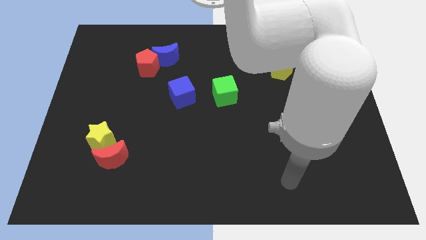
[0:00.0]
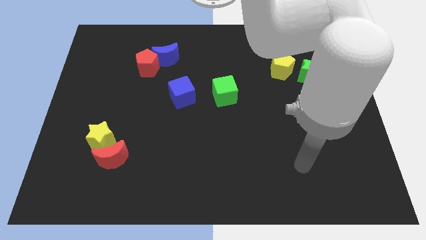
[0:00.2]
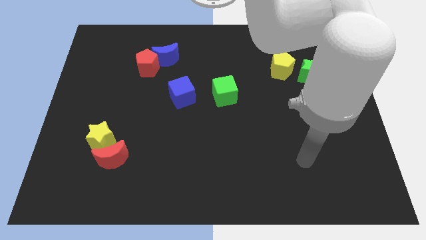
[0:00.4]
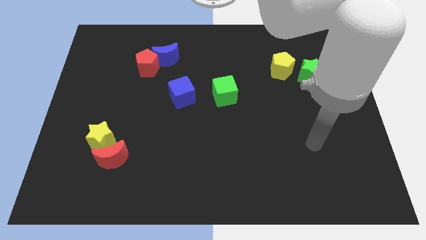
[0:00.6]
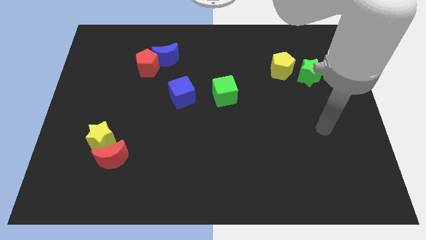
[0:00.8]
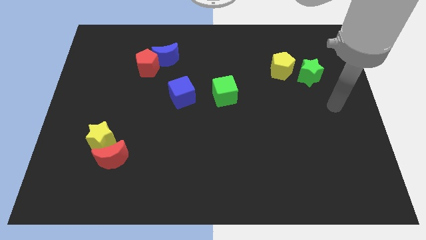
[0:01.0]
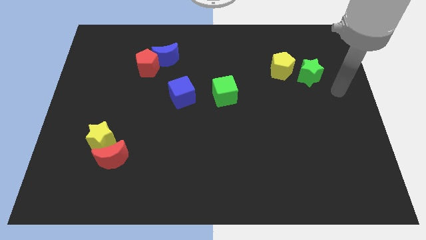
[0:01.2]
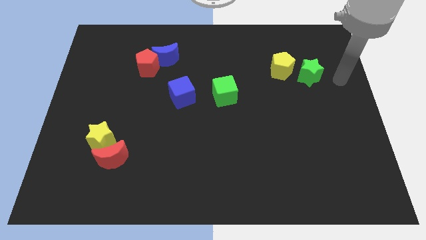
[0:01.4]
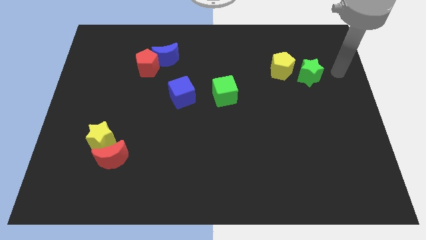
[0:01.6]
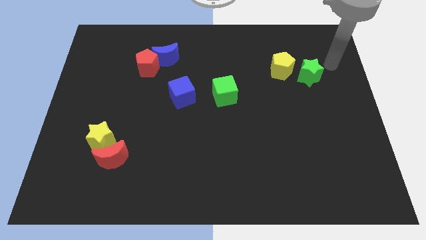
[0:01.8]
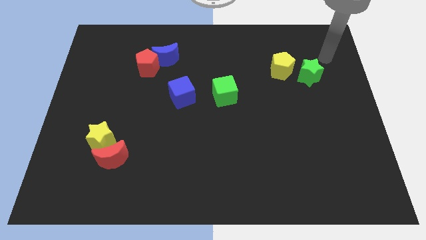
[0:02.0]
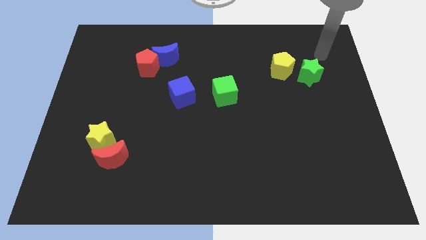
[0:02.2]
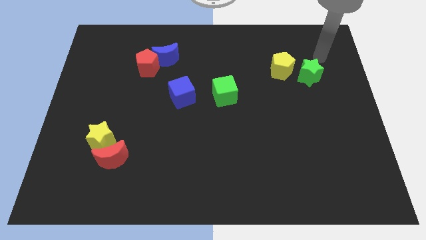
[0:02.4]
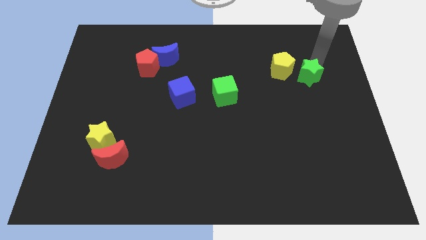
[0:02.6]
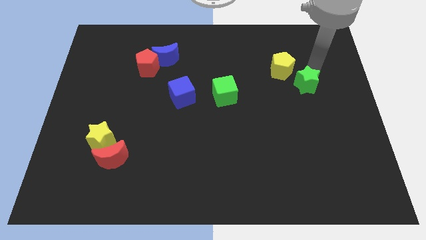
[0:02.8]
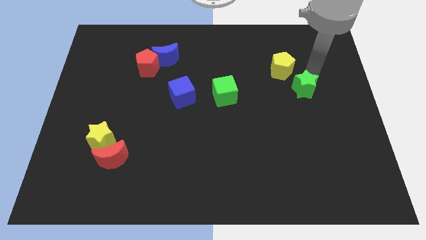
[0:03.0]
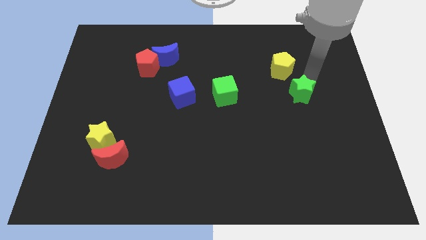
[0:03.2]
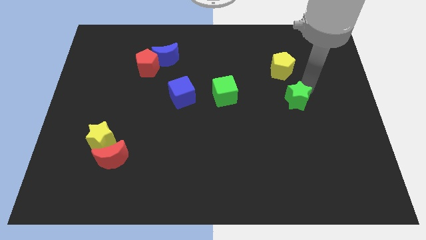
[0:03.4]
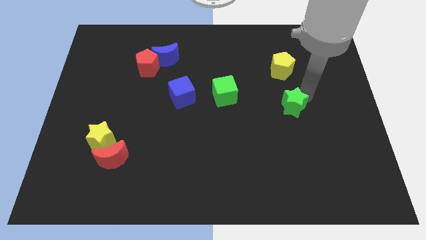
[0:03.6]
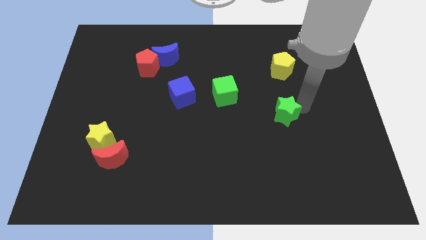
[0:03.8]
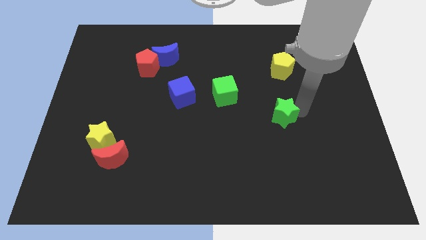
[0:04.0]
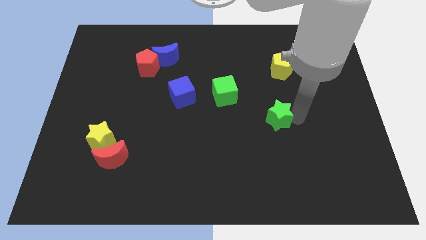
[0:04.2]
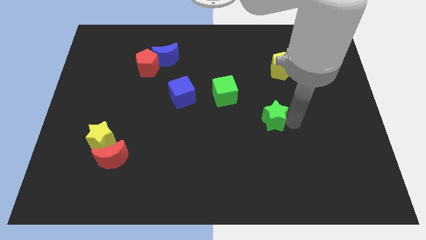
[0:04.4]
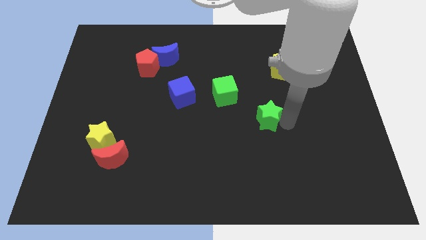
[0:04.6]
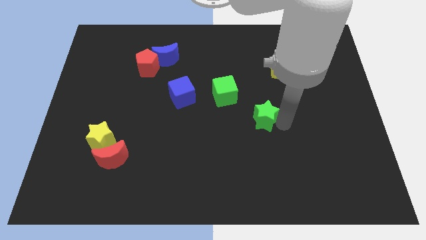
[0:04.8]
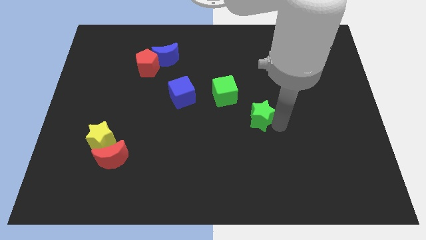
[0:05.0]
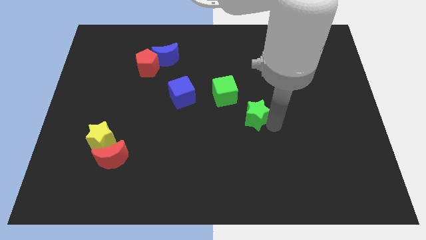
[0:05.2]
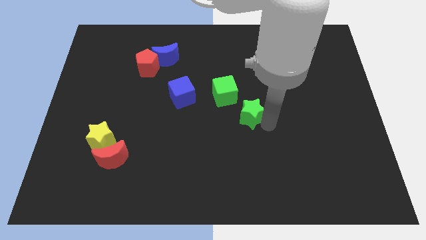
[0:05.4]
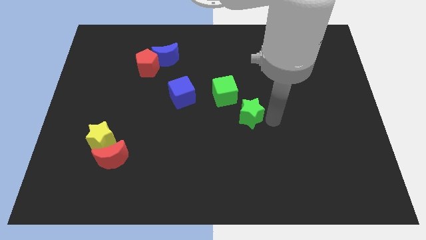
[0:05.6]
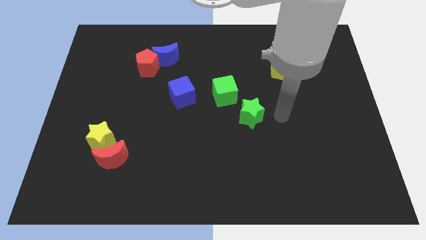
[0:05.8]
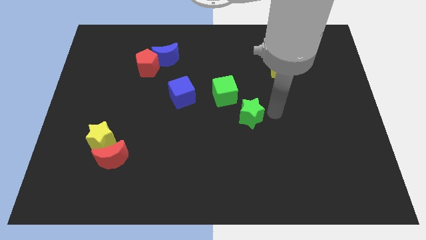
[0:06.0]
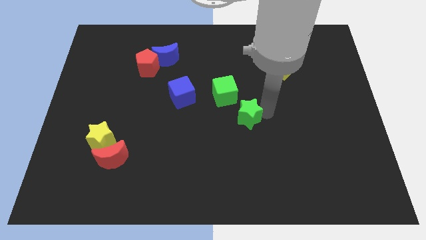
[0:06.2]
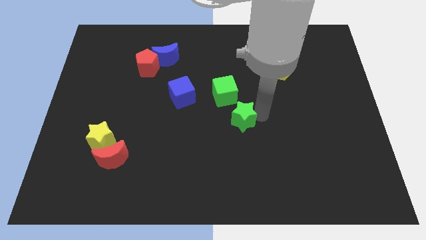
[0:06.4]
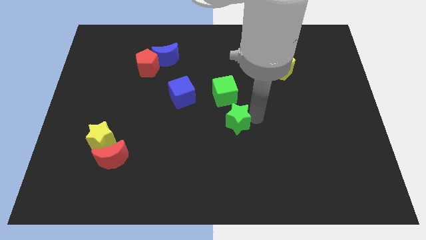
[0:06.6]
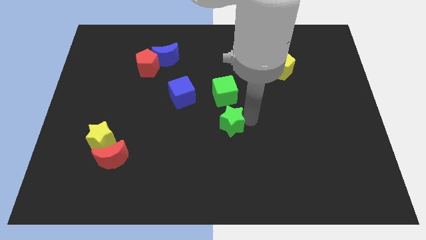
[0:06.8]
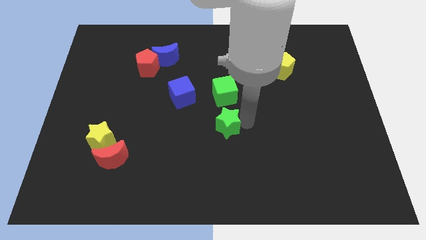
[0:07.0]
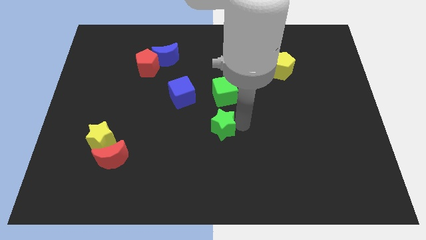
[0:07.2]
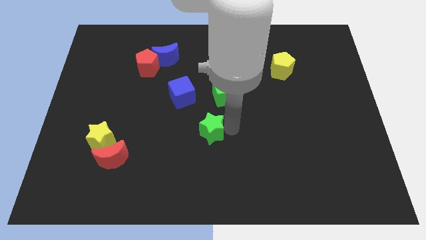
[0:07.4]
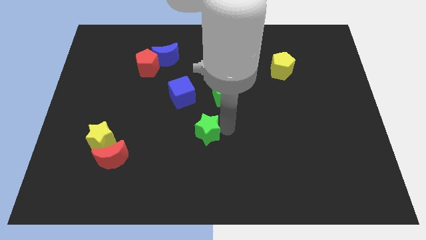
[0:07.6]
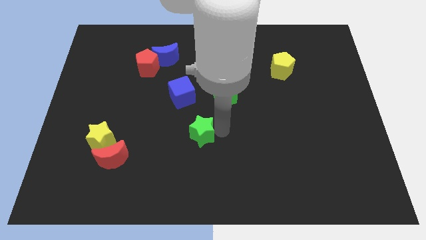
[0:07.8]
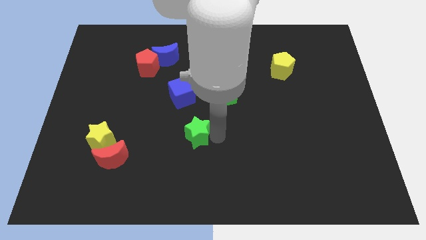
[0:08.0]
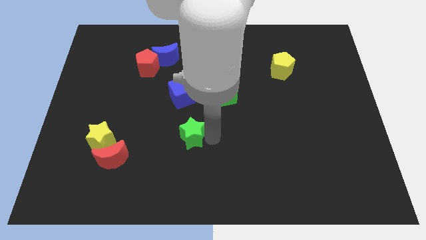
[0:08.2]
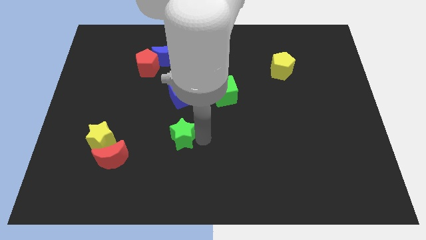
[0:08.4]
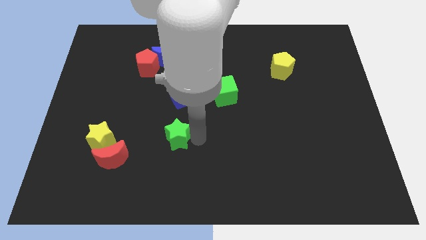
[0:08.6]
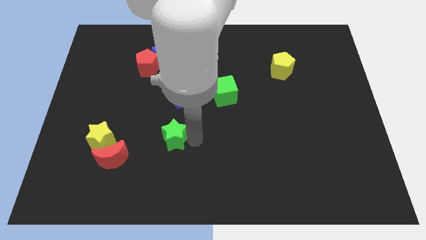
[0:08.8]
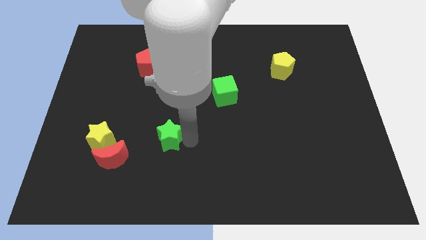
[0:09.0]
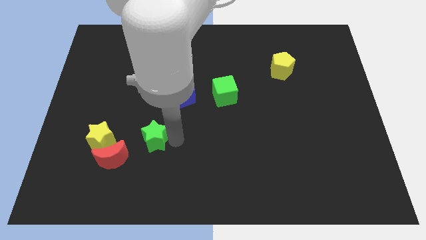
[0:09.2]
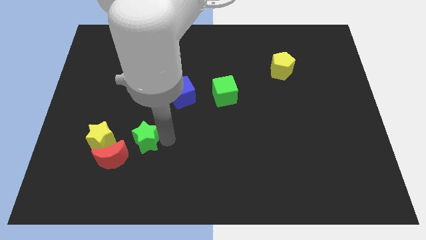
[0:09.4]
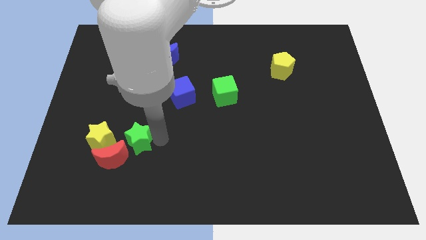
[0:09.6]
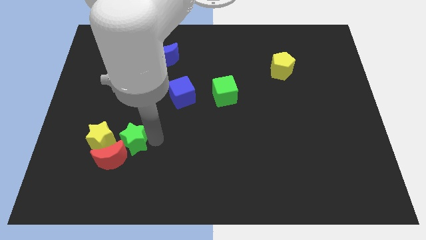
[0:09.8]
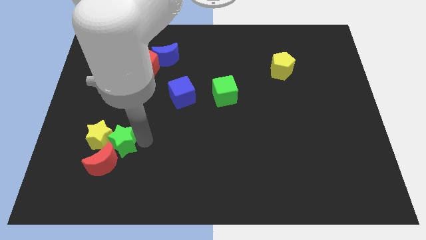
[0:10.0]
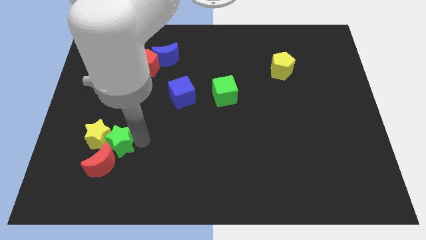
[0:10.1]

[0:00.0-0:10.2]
push the green star to the yellow star

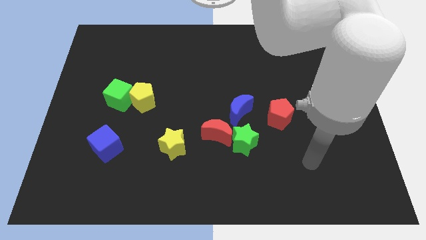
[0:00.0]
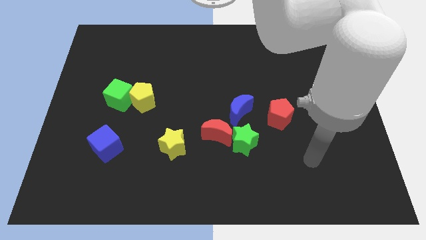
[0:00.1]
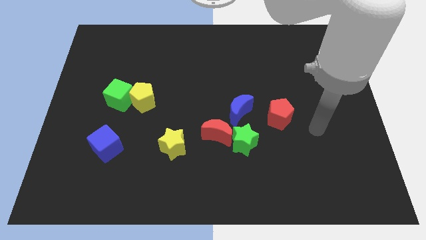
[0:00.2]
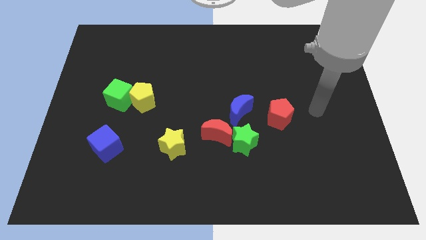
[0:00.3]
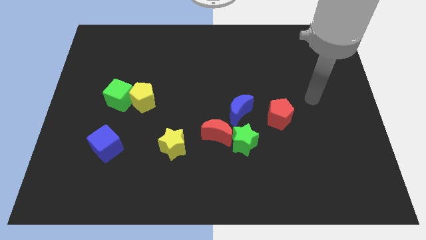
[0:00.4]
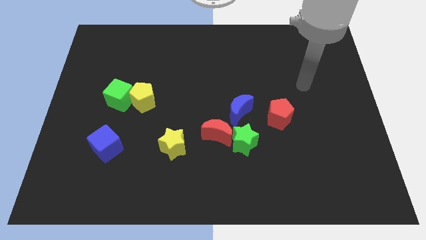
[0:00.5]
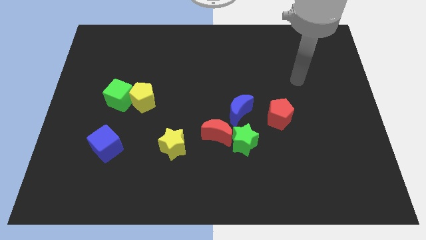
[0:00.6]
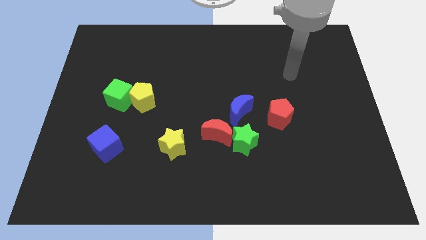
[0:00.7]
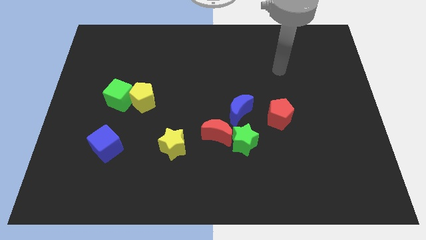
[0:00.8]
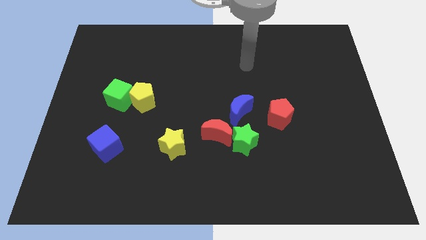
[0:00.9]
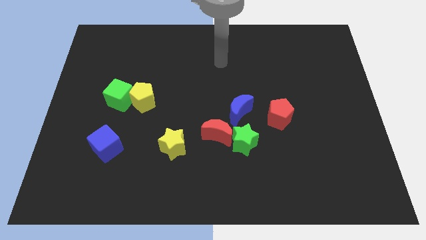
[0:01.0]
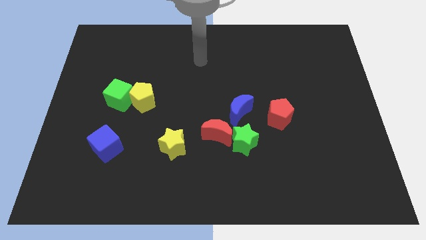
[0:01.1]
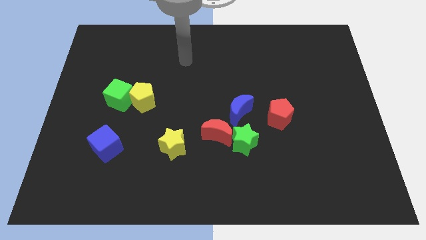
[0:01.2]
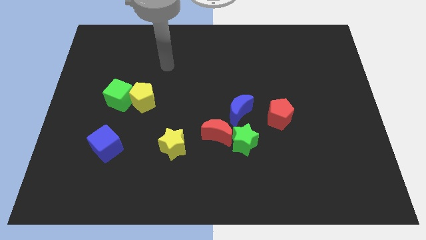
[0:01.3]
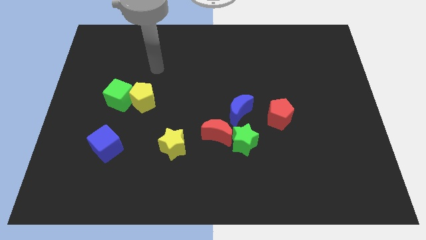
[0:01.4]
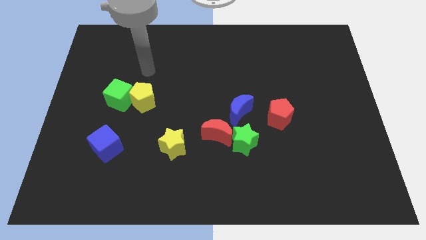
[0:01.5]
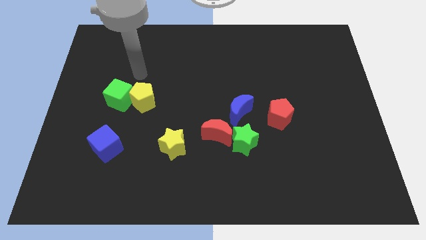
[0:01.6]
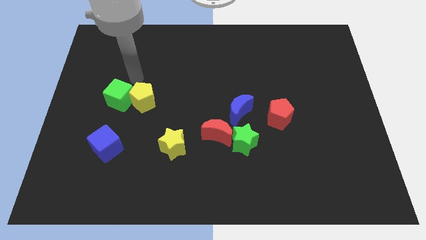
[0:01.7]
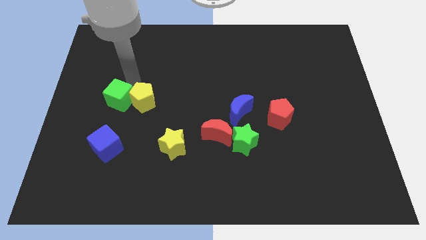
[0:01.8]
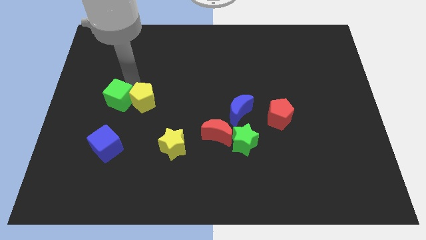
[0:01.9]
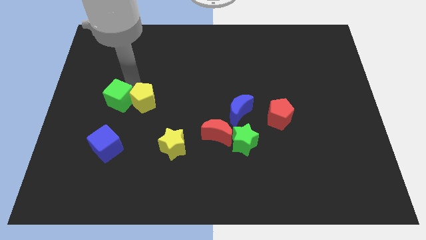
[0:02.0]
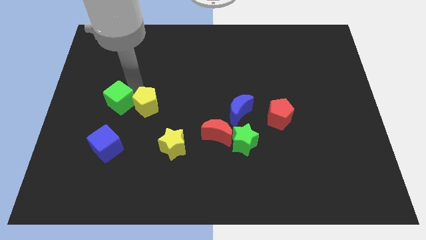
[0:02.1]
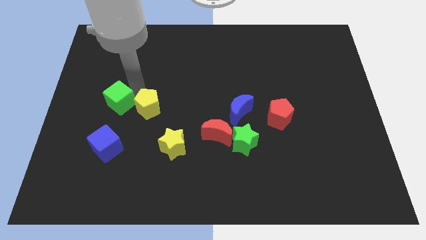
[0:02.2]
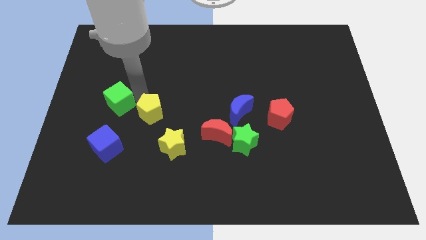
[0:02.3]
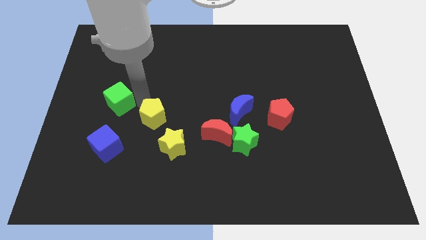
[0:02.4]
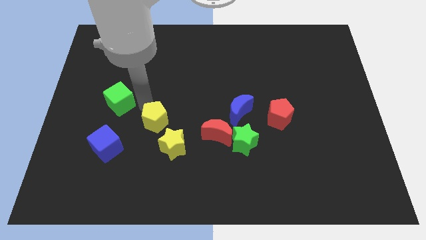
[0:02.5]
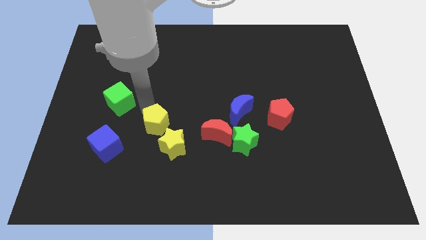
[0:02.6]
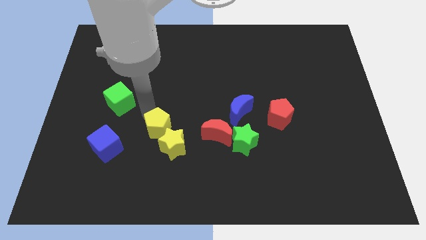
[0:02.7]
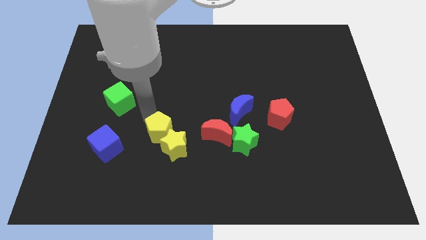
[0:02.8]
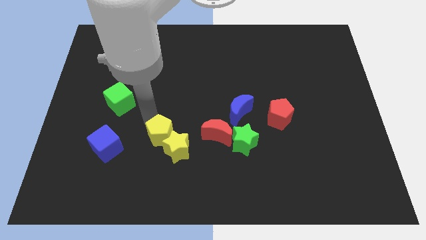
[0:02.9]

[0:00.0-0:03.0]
slide the yellow pentagon to the yellow star

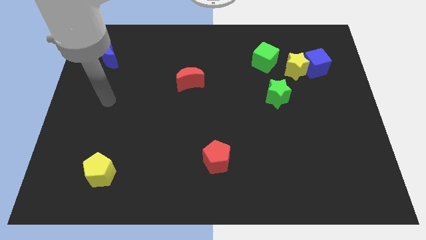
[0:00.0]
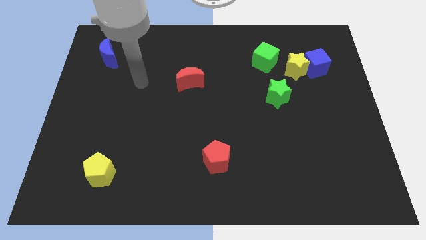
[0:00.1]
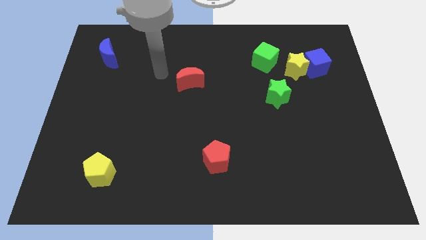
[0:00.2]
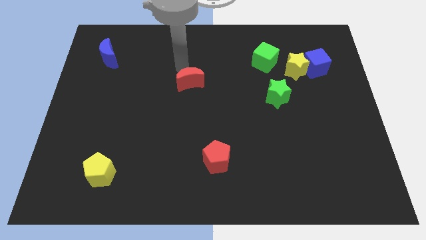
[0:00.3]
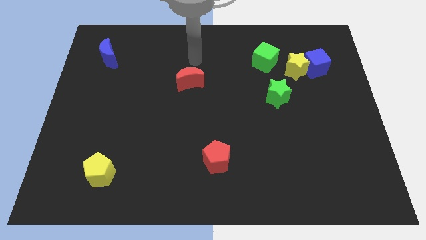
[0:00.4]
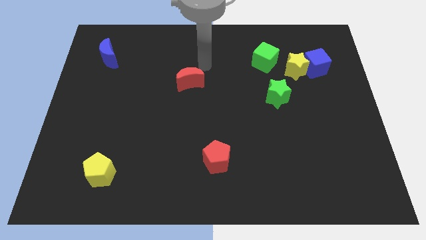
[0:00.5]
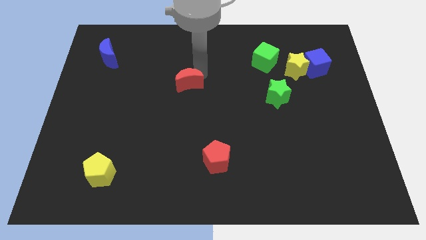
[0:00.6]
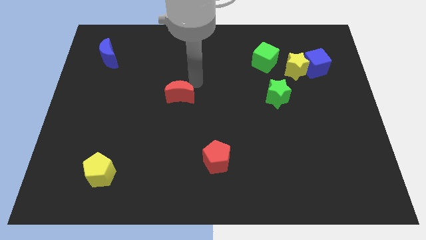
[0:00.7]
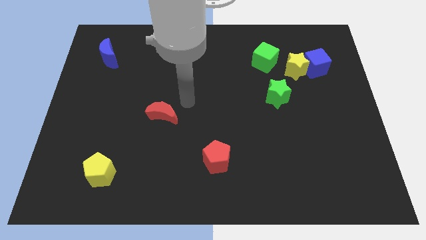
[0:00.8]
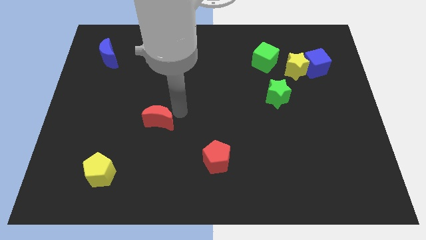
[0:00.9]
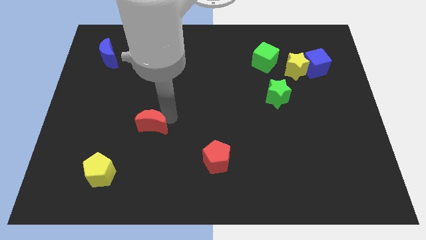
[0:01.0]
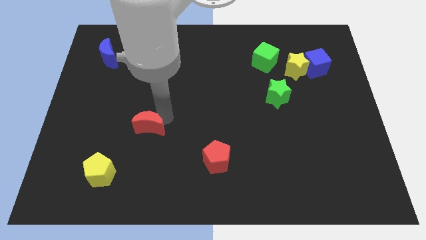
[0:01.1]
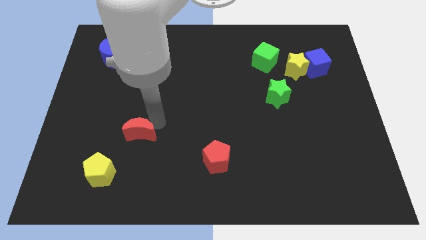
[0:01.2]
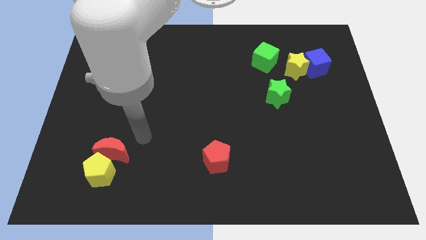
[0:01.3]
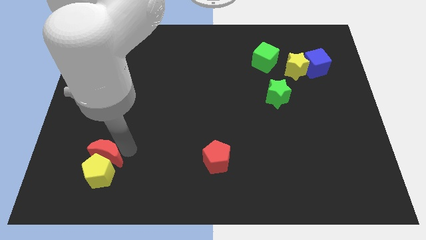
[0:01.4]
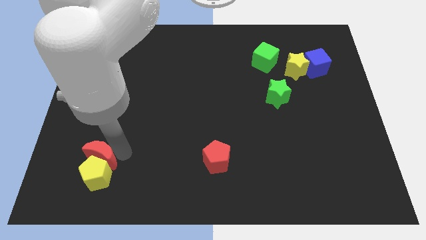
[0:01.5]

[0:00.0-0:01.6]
put the red moon close to the yellow pentagon
